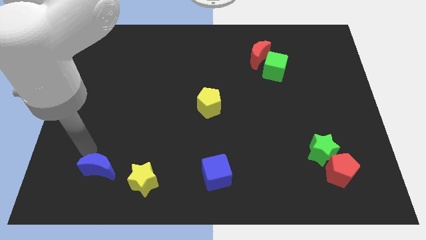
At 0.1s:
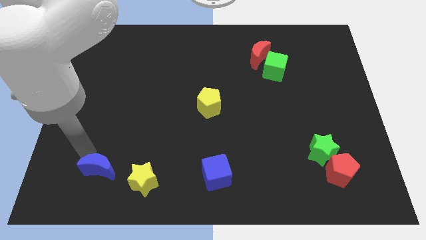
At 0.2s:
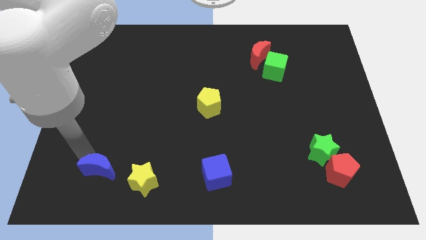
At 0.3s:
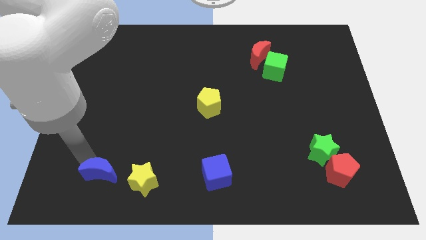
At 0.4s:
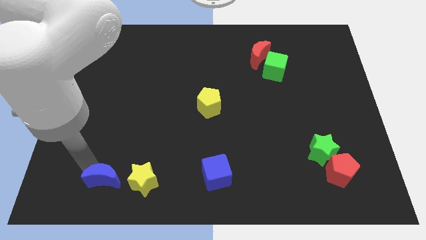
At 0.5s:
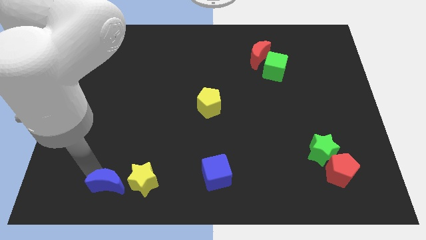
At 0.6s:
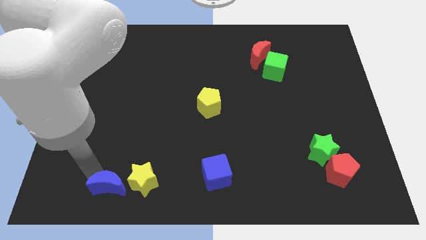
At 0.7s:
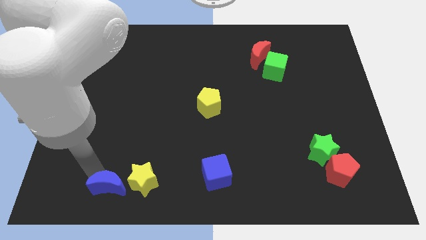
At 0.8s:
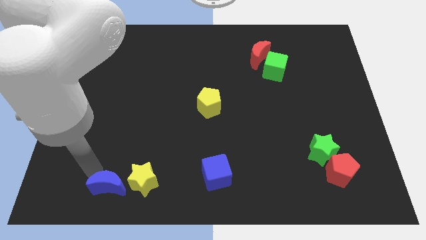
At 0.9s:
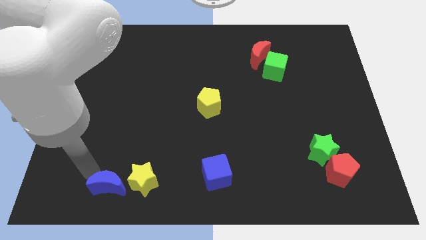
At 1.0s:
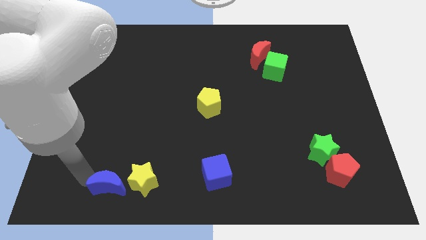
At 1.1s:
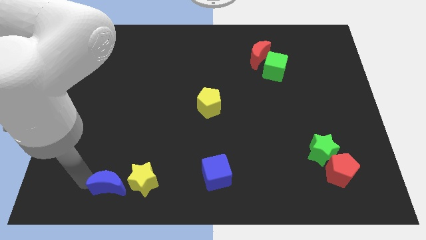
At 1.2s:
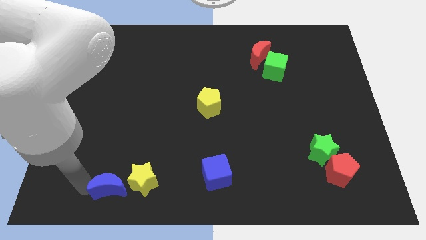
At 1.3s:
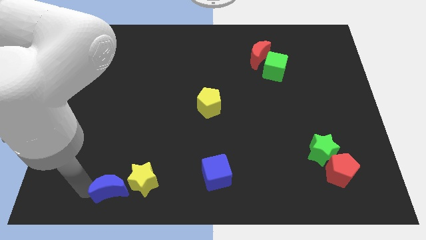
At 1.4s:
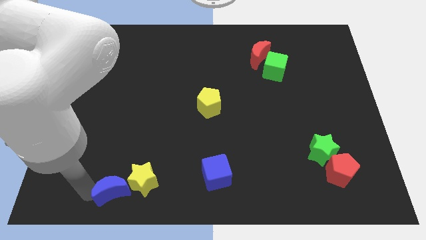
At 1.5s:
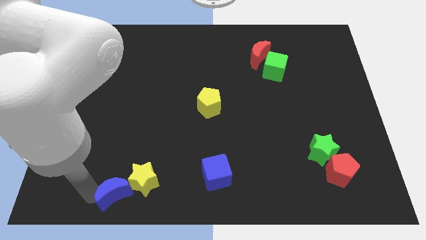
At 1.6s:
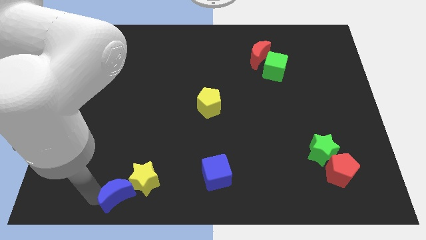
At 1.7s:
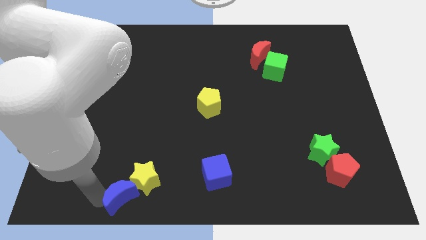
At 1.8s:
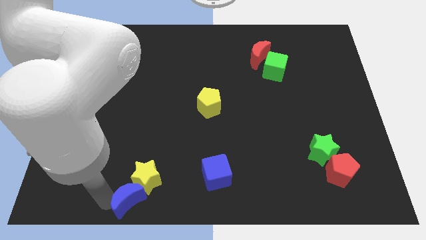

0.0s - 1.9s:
push blue moon into the yellow star

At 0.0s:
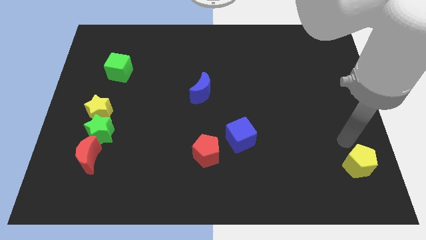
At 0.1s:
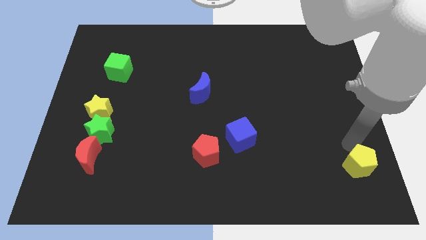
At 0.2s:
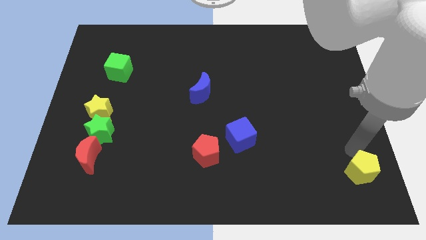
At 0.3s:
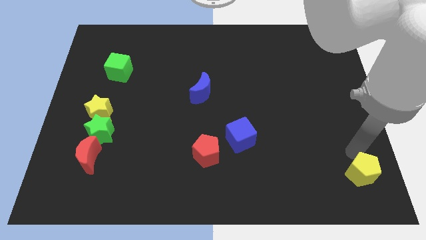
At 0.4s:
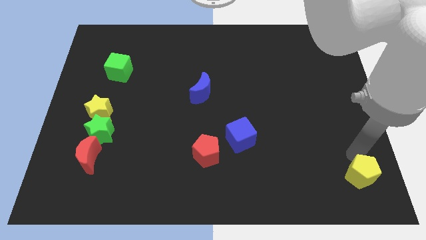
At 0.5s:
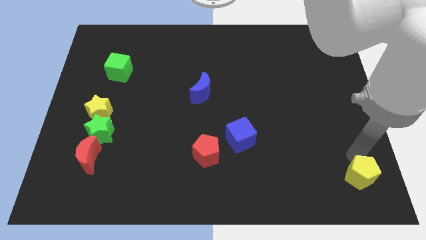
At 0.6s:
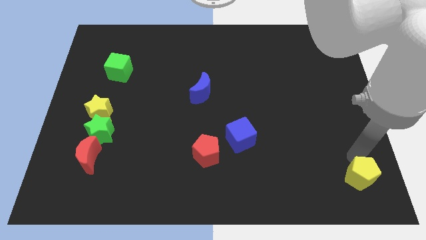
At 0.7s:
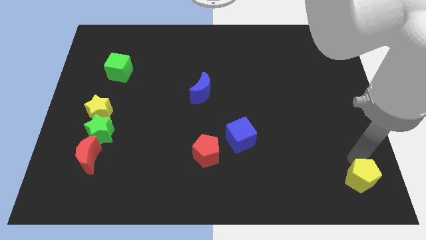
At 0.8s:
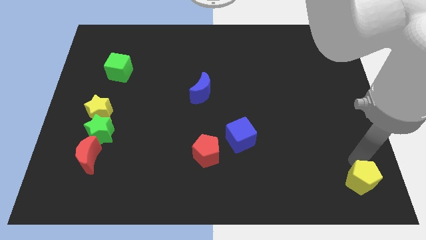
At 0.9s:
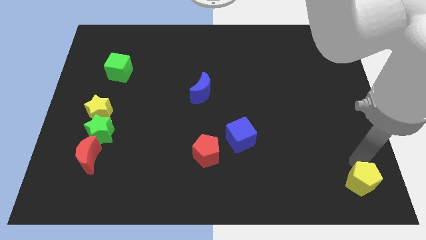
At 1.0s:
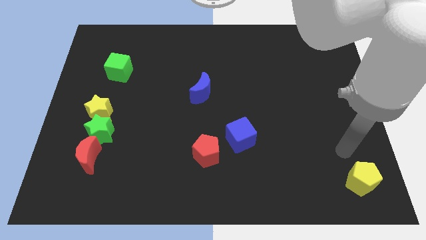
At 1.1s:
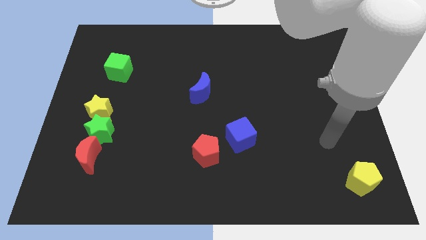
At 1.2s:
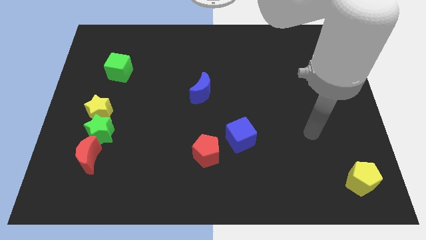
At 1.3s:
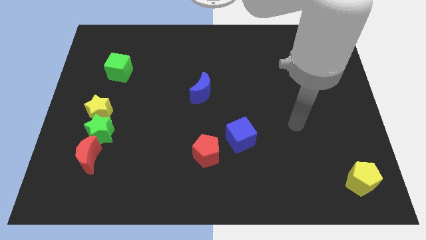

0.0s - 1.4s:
place yellow pentagon to the bottom right corner of the board

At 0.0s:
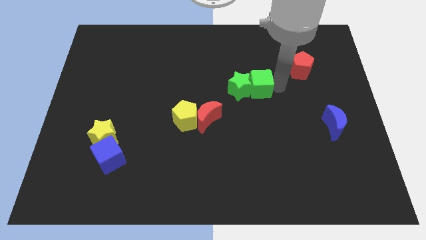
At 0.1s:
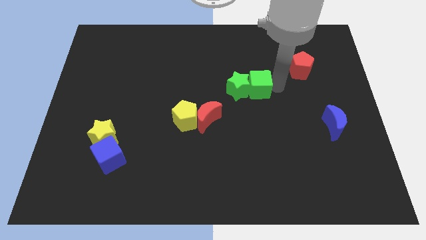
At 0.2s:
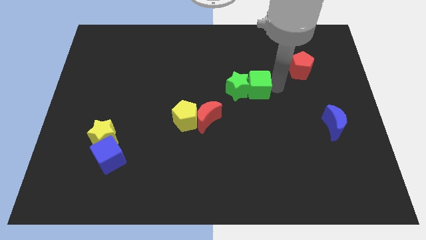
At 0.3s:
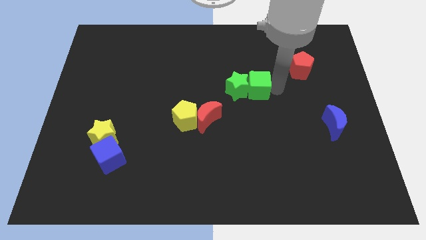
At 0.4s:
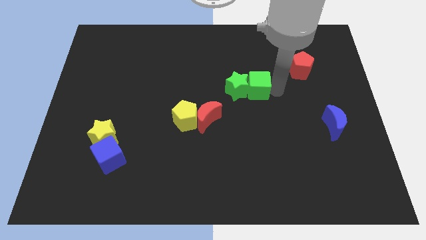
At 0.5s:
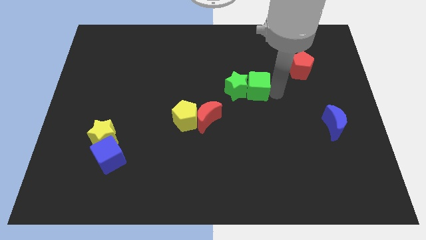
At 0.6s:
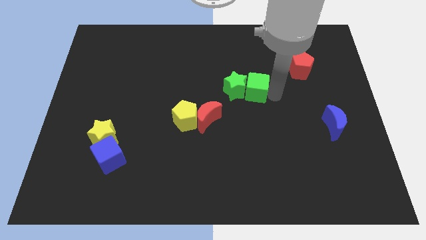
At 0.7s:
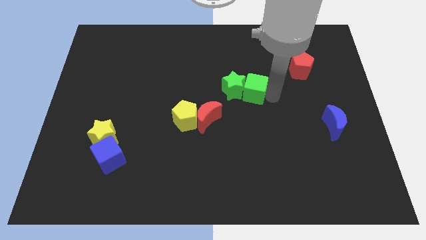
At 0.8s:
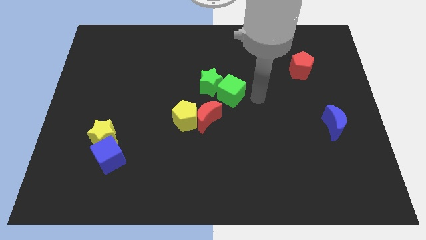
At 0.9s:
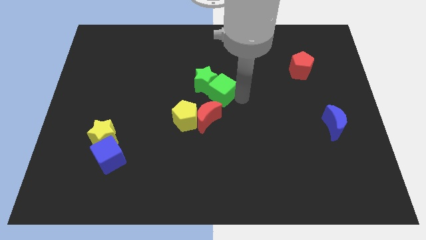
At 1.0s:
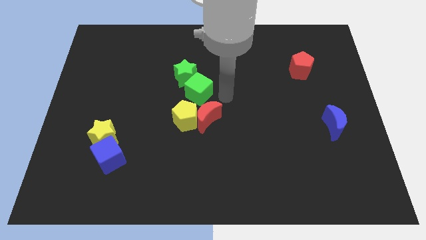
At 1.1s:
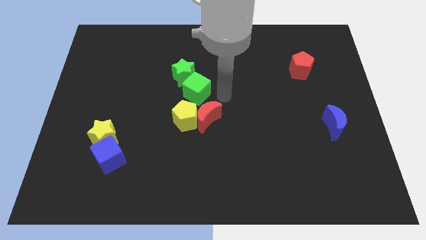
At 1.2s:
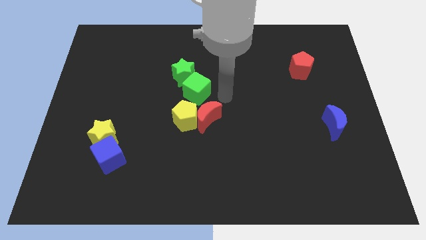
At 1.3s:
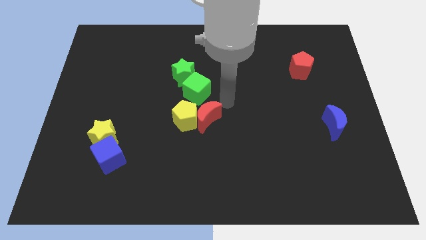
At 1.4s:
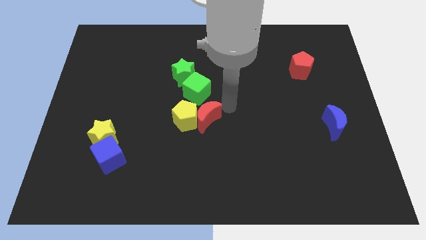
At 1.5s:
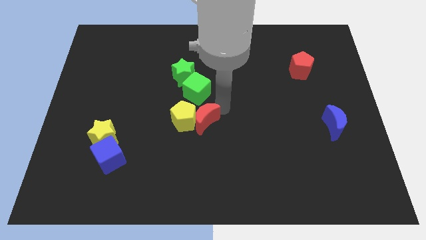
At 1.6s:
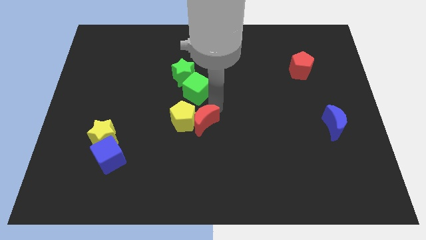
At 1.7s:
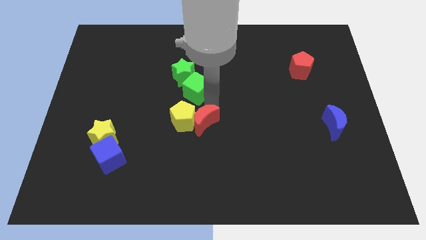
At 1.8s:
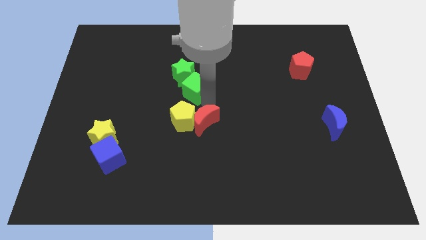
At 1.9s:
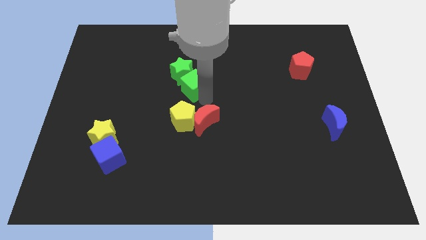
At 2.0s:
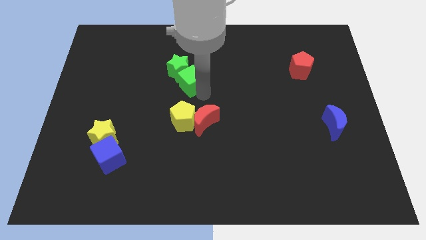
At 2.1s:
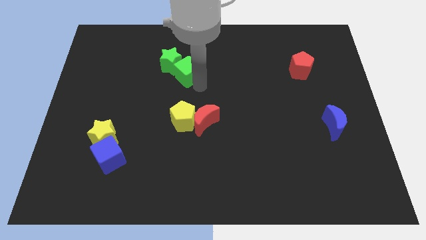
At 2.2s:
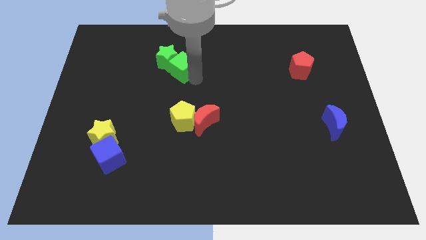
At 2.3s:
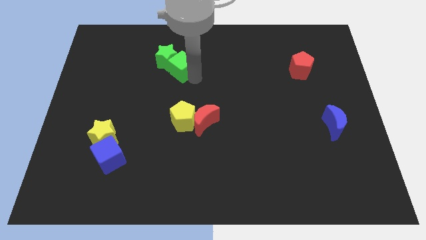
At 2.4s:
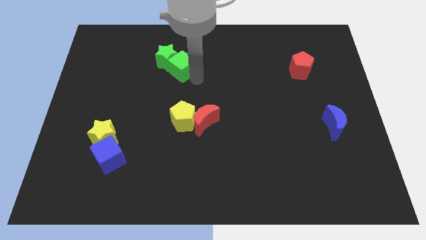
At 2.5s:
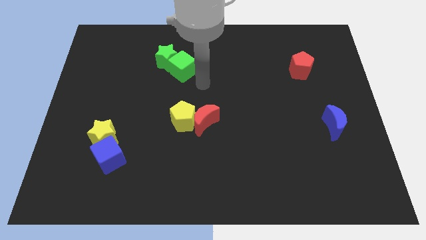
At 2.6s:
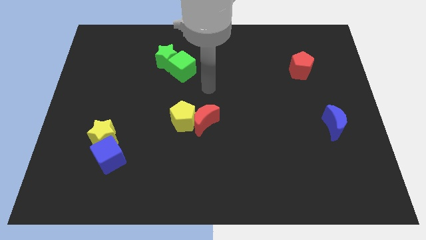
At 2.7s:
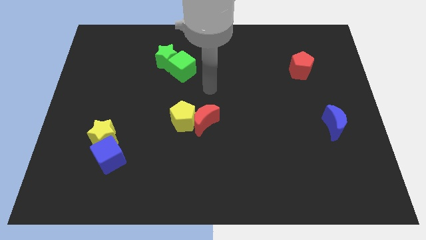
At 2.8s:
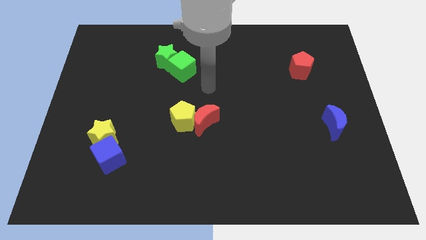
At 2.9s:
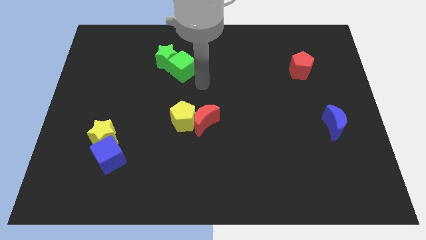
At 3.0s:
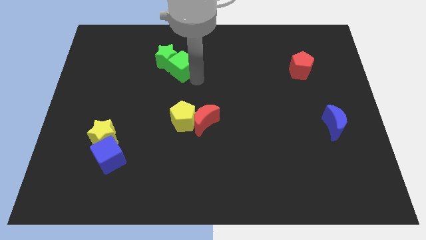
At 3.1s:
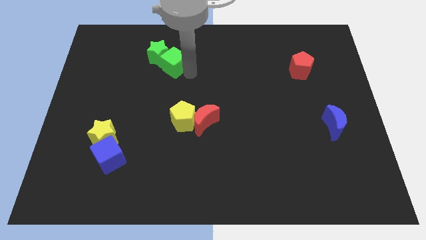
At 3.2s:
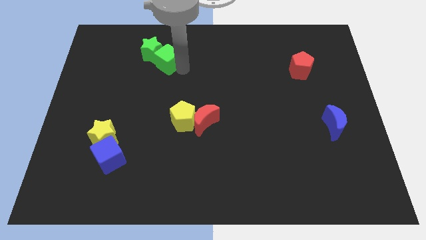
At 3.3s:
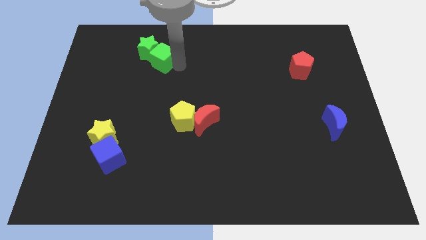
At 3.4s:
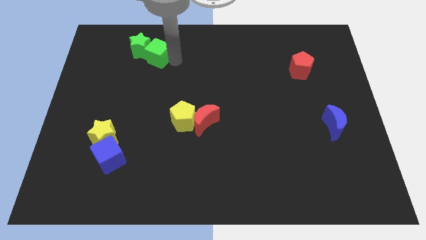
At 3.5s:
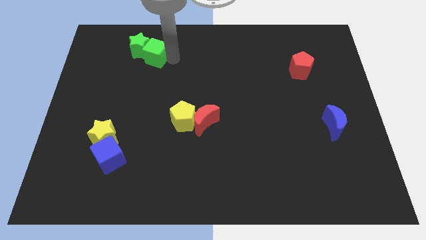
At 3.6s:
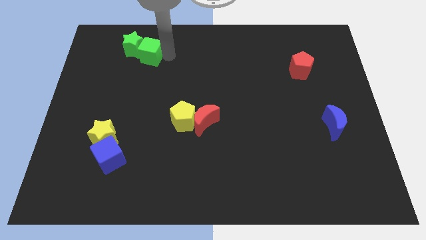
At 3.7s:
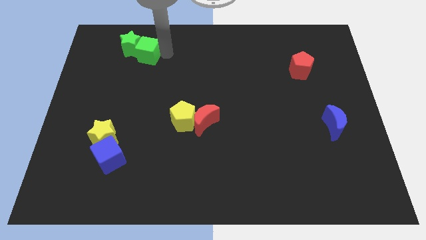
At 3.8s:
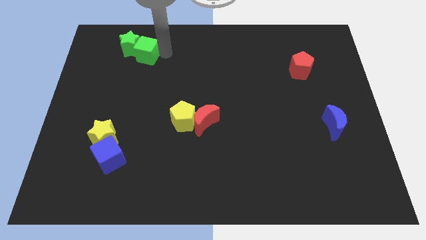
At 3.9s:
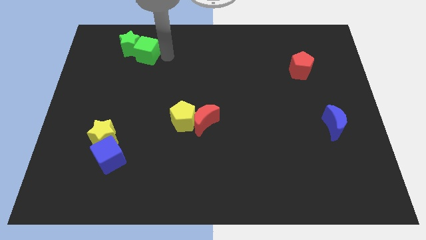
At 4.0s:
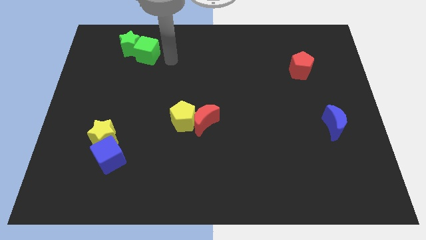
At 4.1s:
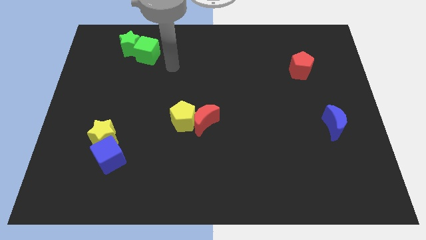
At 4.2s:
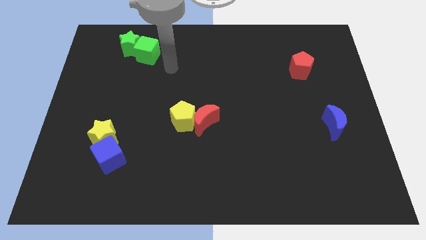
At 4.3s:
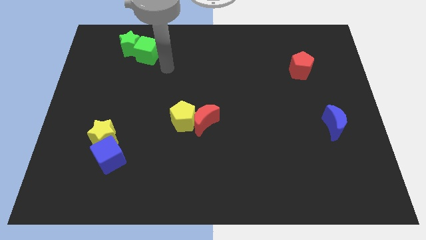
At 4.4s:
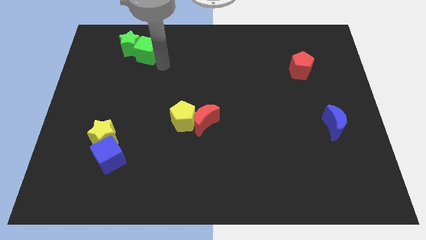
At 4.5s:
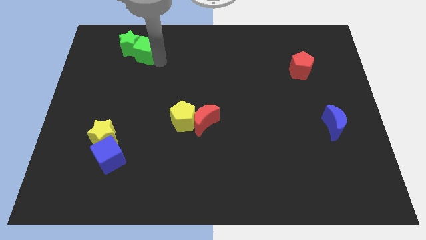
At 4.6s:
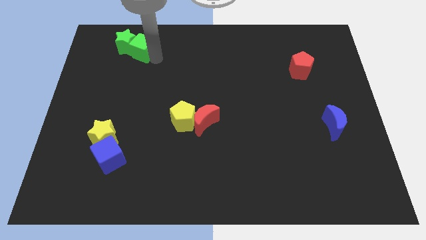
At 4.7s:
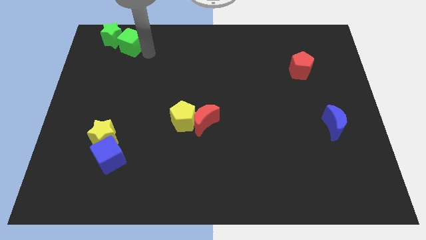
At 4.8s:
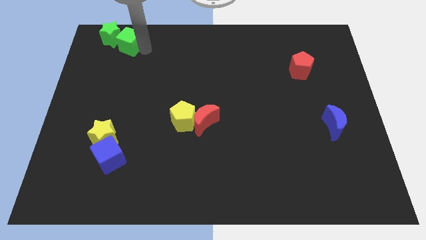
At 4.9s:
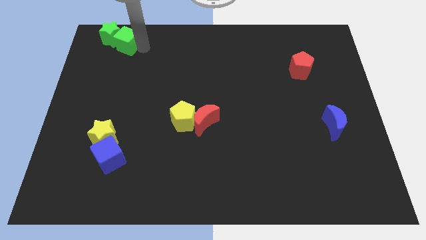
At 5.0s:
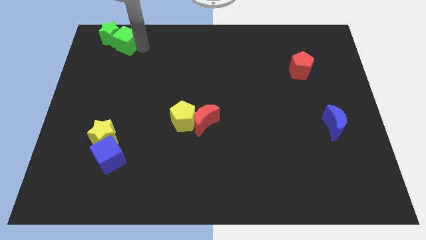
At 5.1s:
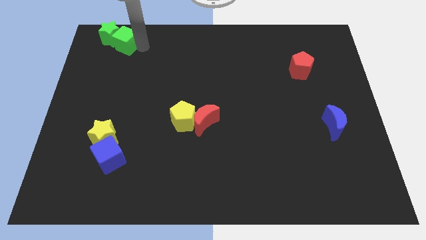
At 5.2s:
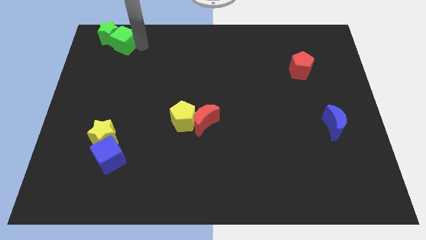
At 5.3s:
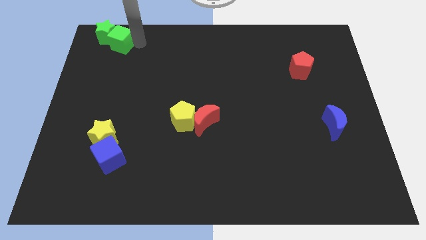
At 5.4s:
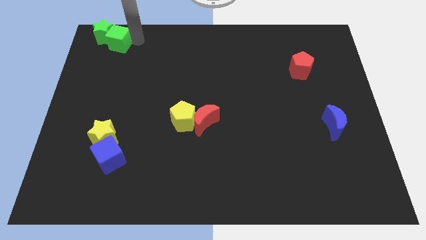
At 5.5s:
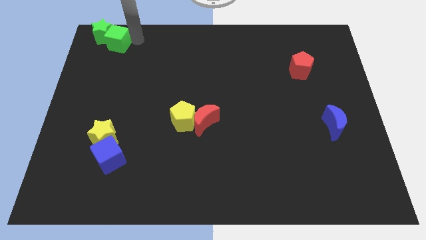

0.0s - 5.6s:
move green block along with green star to the top left of the board
